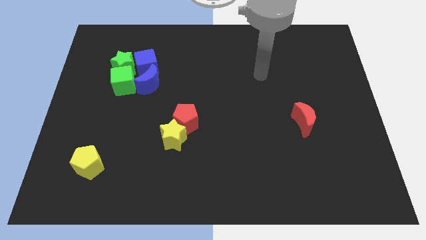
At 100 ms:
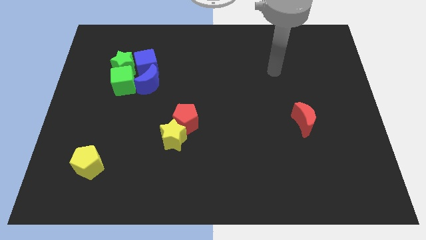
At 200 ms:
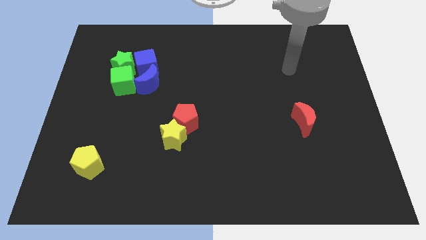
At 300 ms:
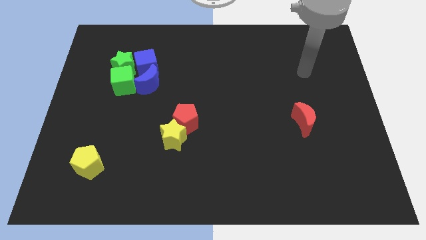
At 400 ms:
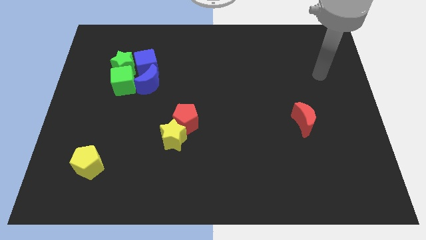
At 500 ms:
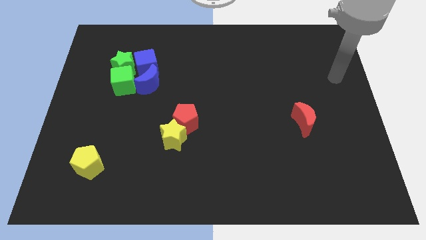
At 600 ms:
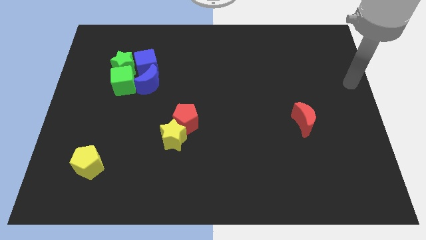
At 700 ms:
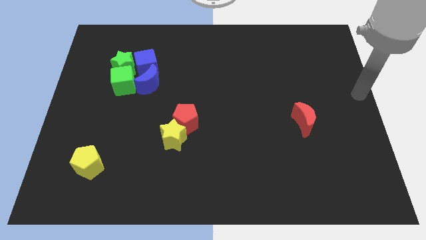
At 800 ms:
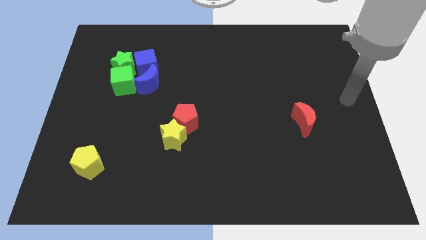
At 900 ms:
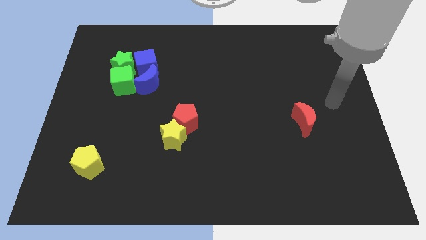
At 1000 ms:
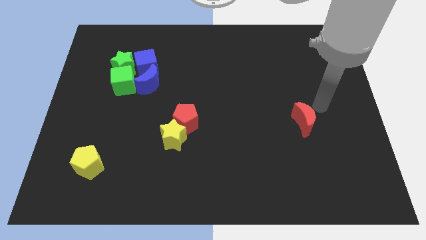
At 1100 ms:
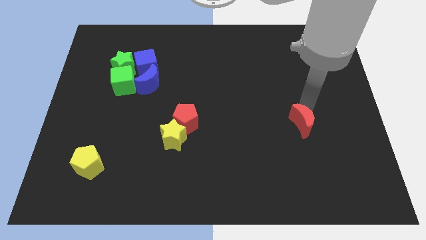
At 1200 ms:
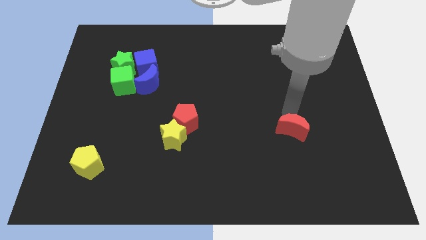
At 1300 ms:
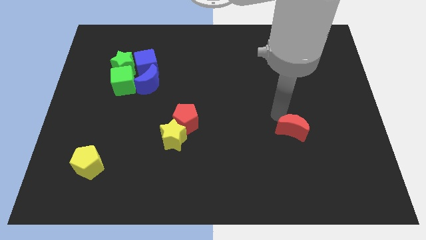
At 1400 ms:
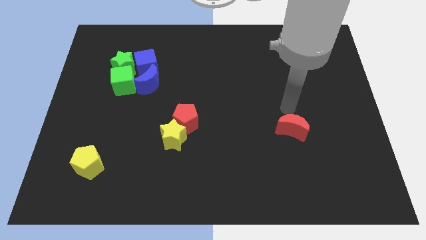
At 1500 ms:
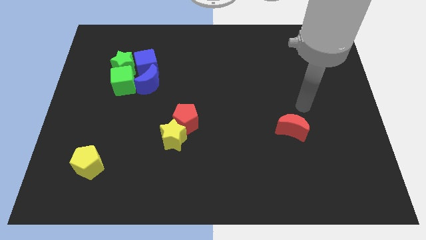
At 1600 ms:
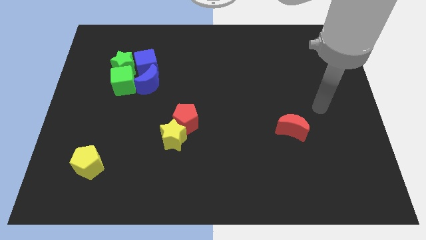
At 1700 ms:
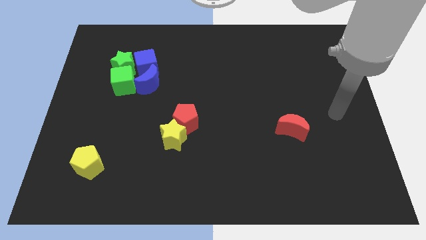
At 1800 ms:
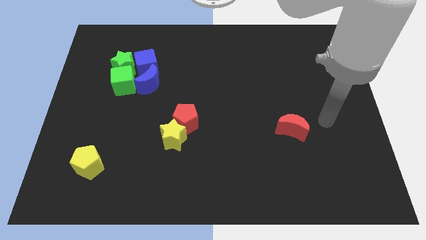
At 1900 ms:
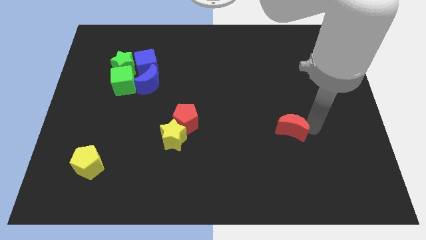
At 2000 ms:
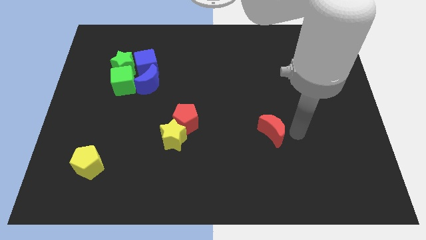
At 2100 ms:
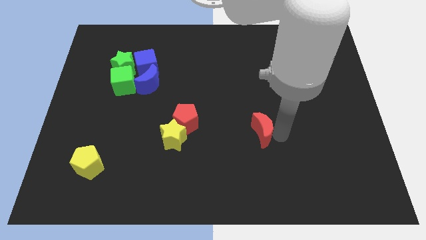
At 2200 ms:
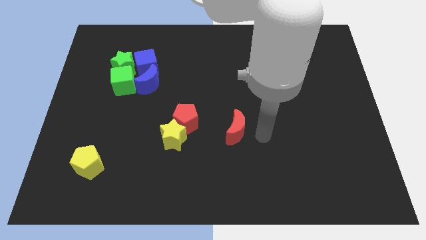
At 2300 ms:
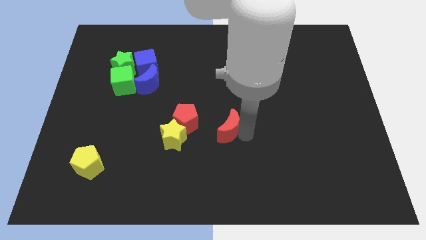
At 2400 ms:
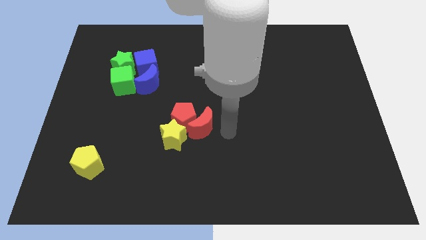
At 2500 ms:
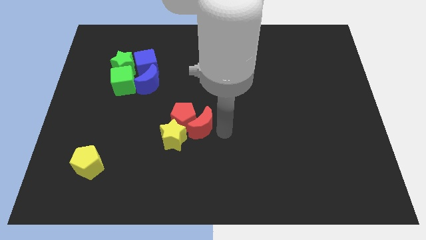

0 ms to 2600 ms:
move the red moon towards the right side of the red pentagon

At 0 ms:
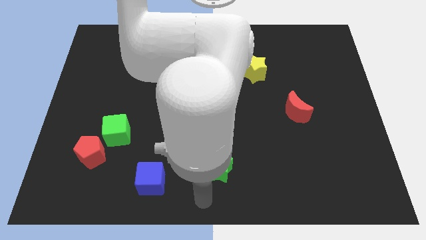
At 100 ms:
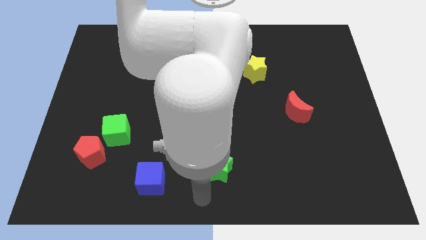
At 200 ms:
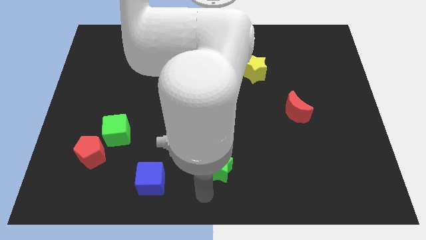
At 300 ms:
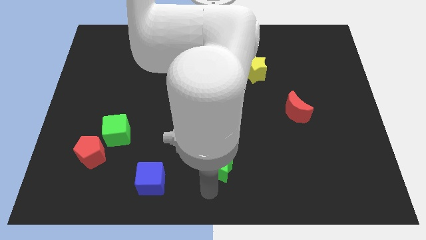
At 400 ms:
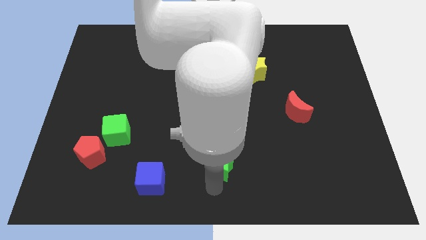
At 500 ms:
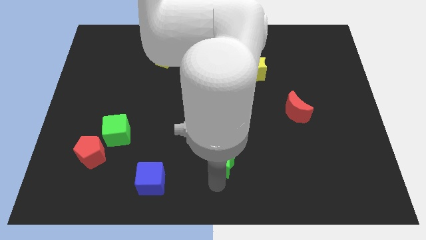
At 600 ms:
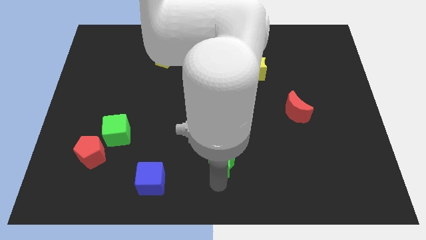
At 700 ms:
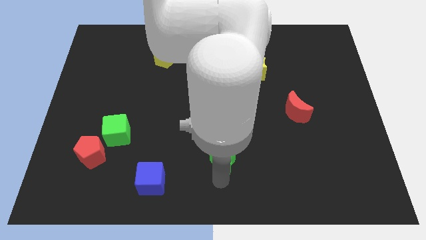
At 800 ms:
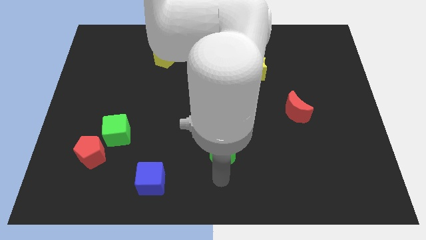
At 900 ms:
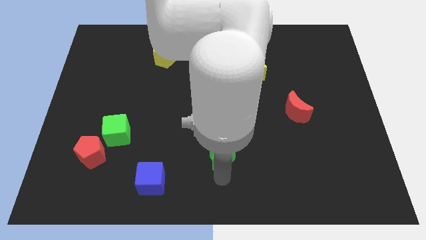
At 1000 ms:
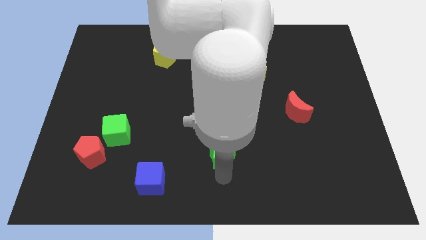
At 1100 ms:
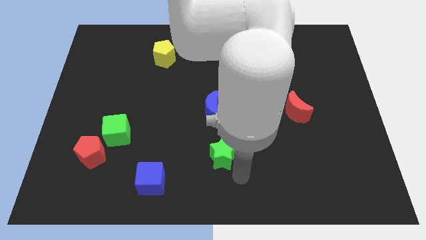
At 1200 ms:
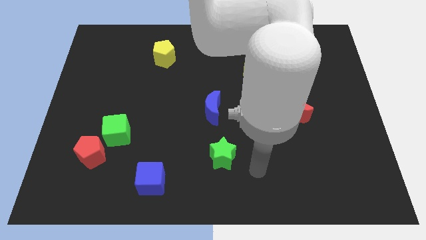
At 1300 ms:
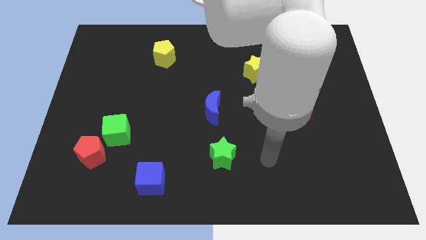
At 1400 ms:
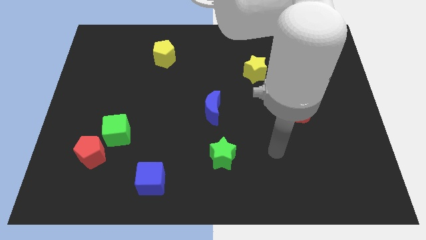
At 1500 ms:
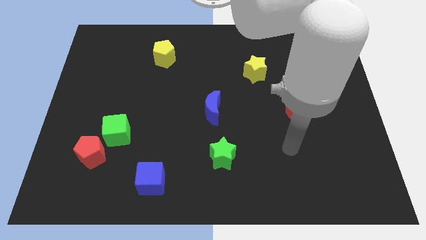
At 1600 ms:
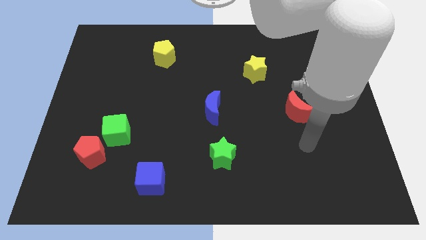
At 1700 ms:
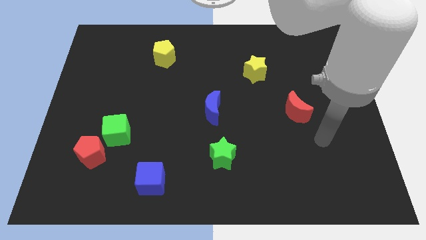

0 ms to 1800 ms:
place the green star vertically below the blue moon

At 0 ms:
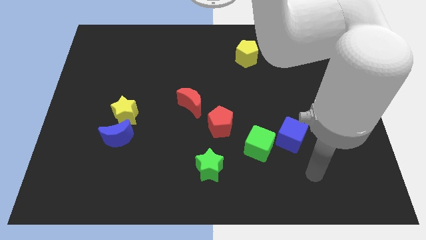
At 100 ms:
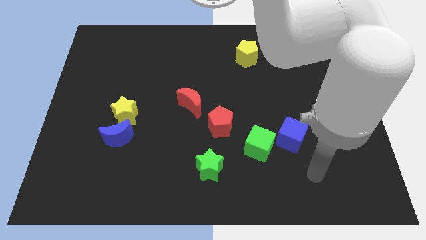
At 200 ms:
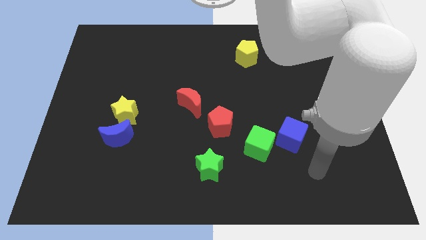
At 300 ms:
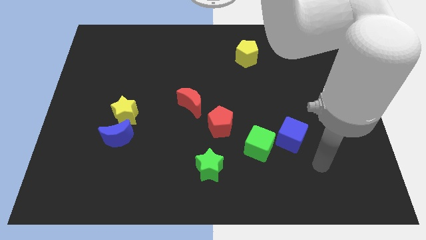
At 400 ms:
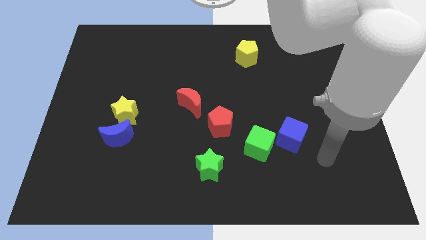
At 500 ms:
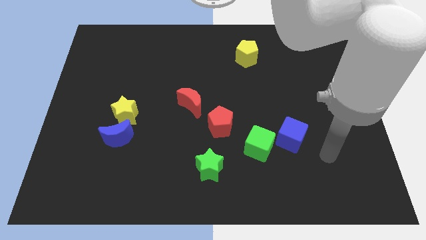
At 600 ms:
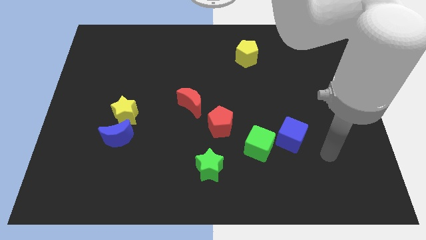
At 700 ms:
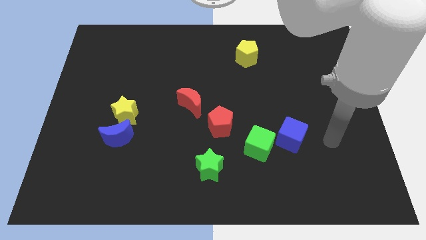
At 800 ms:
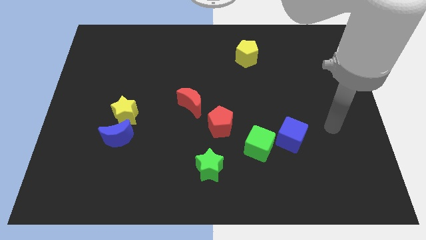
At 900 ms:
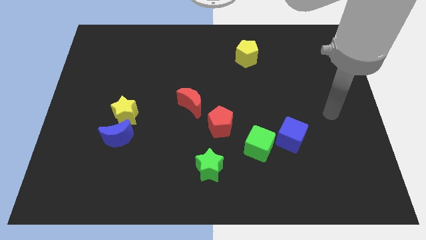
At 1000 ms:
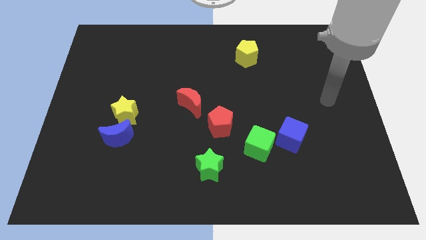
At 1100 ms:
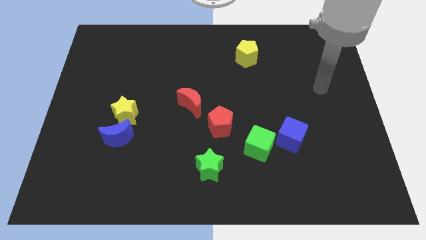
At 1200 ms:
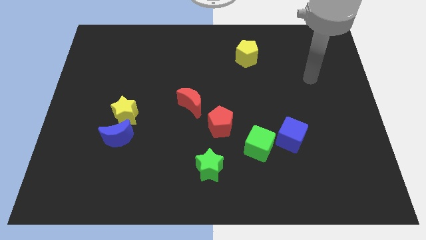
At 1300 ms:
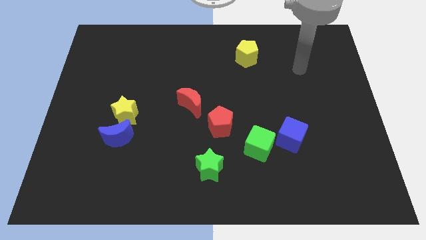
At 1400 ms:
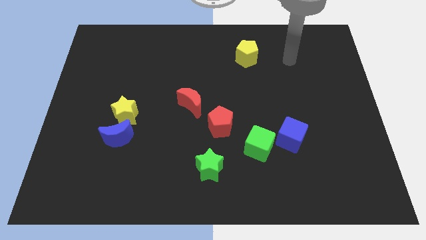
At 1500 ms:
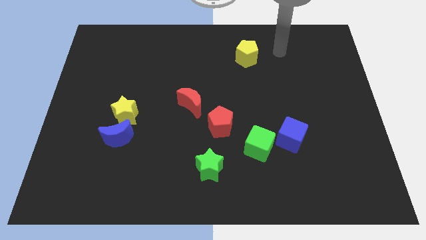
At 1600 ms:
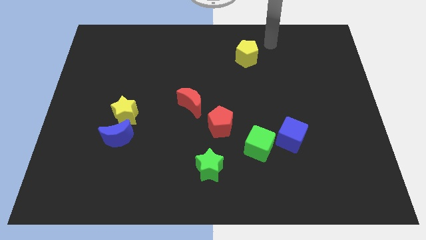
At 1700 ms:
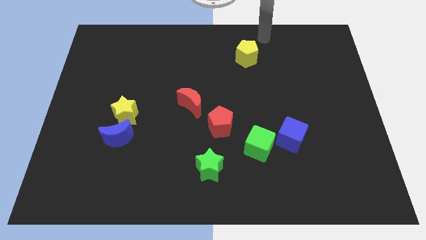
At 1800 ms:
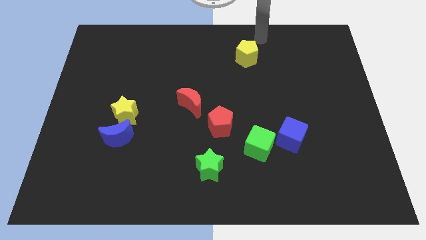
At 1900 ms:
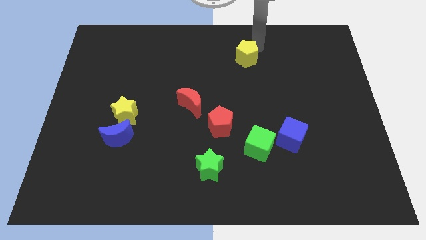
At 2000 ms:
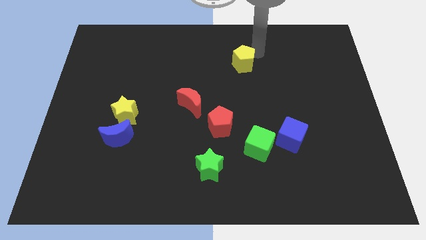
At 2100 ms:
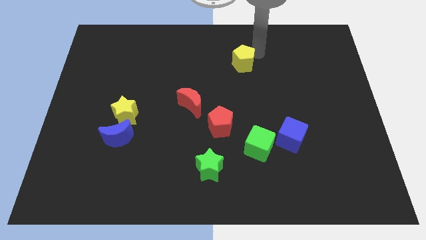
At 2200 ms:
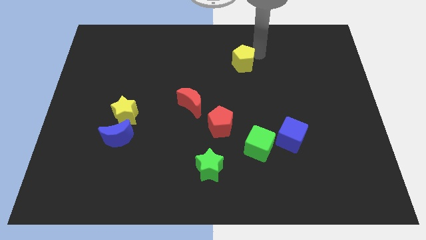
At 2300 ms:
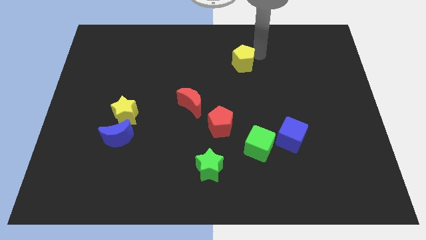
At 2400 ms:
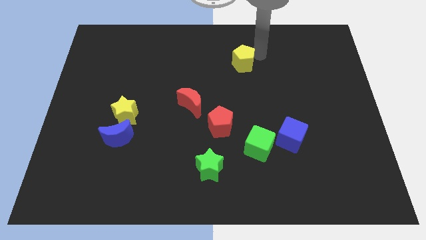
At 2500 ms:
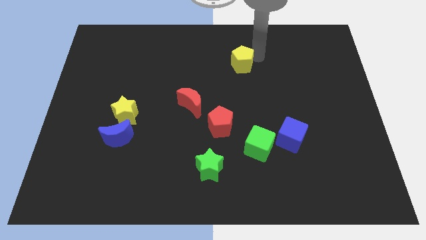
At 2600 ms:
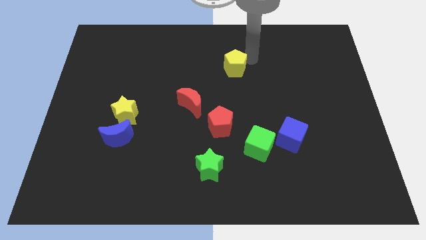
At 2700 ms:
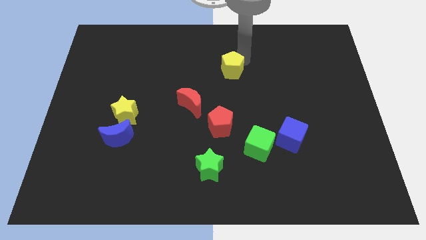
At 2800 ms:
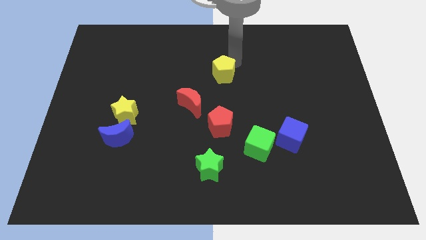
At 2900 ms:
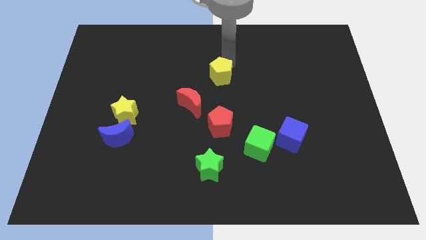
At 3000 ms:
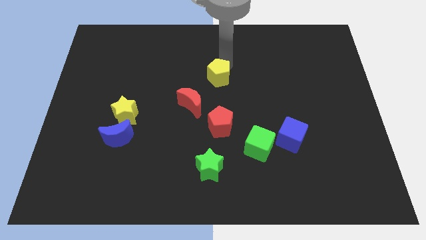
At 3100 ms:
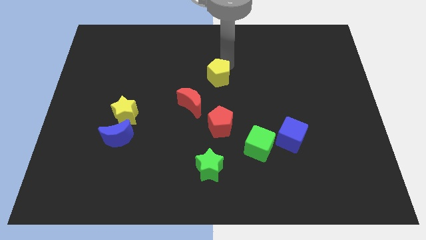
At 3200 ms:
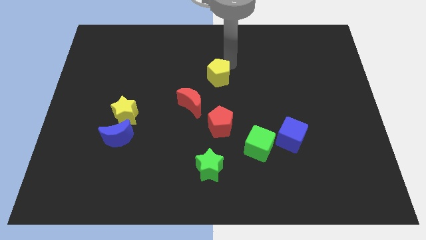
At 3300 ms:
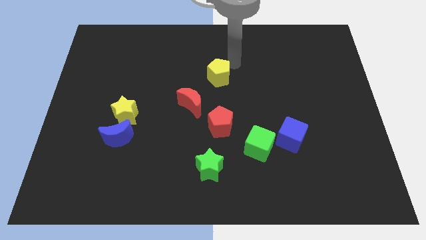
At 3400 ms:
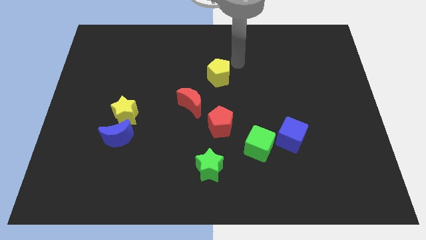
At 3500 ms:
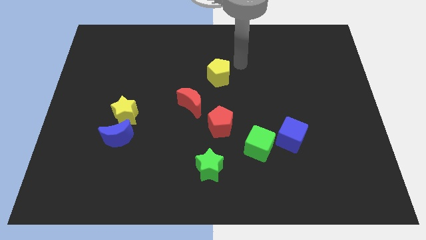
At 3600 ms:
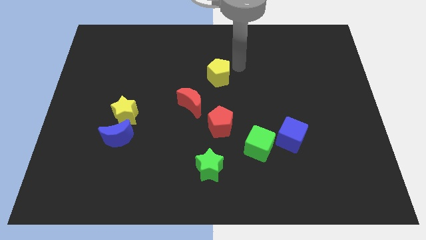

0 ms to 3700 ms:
move the yellow pentagon diagonally to red moon

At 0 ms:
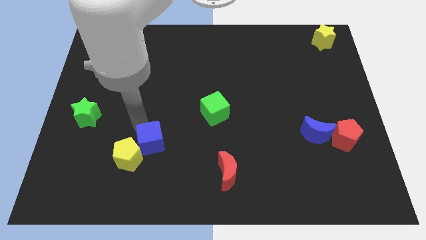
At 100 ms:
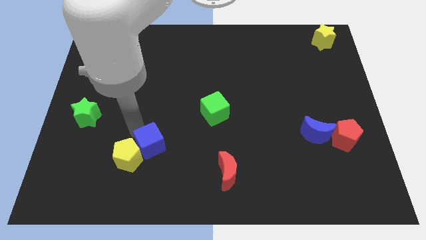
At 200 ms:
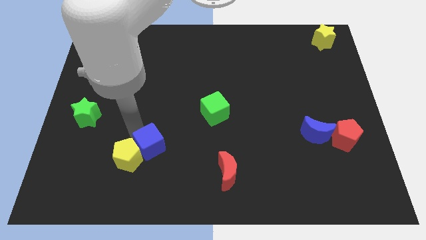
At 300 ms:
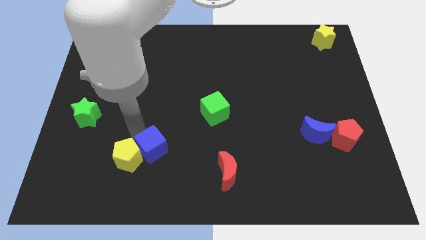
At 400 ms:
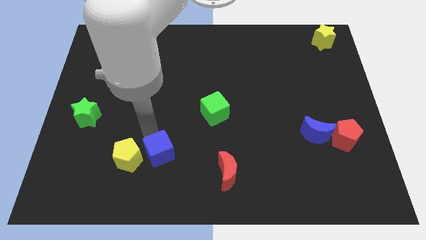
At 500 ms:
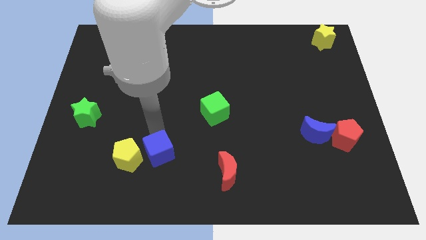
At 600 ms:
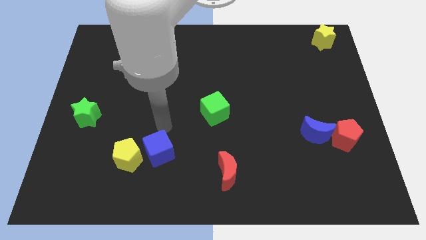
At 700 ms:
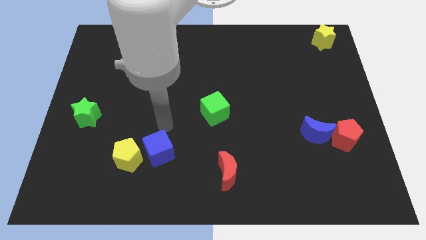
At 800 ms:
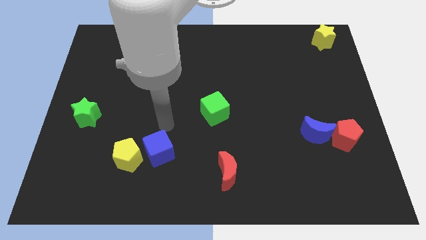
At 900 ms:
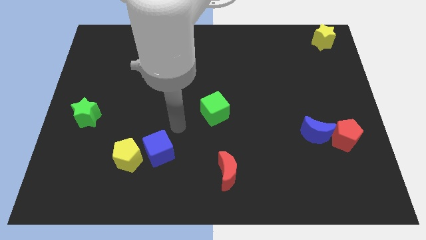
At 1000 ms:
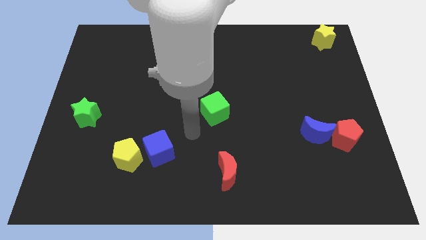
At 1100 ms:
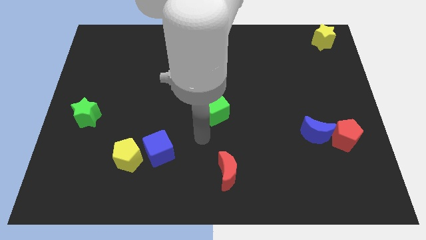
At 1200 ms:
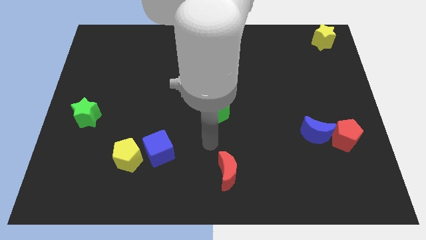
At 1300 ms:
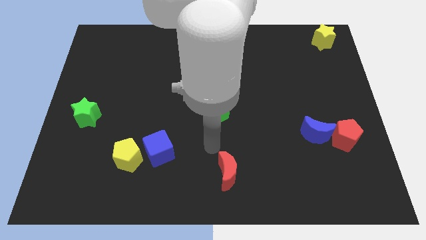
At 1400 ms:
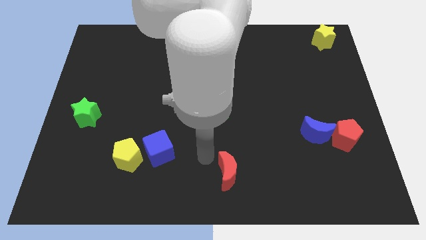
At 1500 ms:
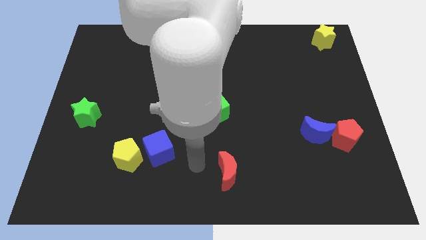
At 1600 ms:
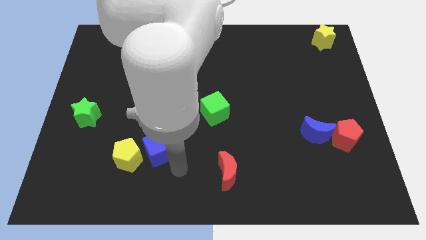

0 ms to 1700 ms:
separate blue cube from the yellow pentagon
